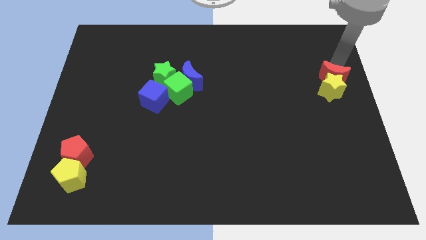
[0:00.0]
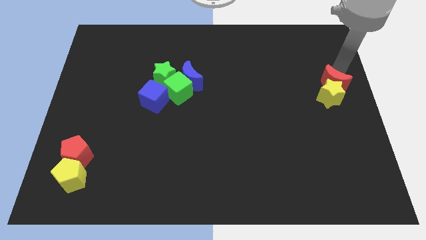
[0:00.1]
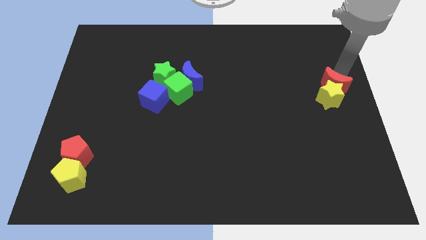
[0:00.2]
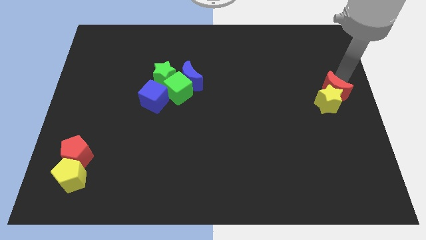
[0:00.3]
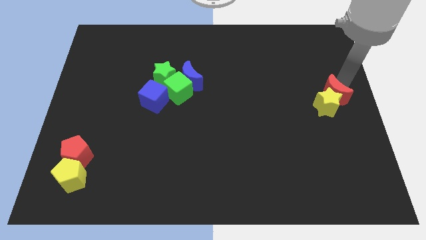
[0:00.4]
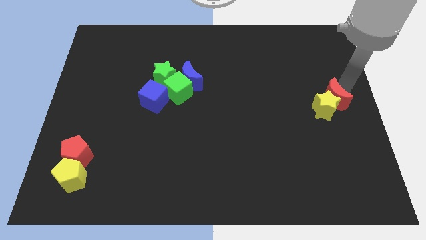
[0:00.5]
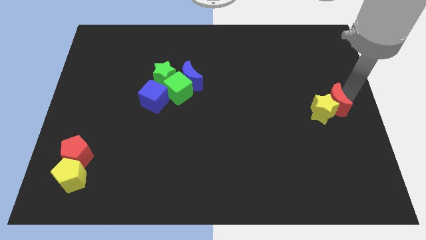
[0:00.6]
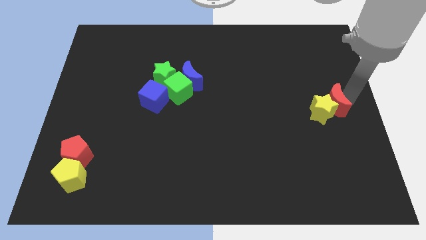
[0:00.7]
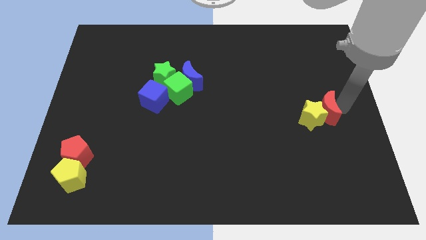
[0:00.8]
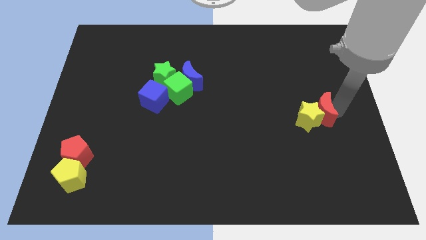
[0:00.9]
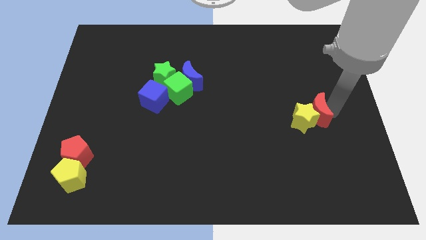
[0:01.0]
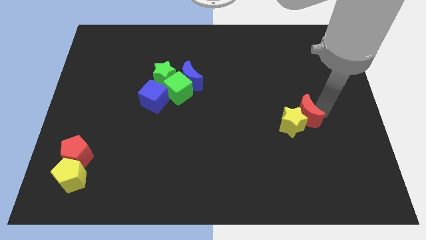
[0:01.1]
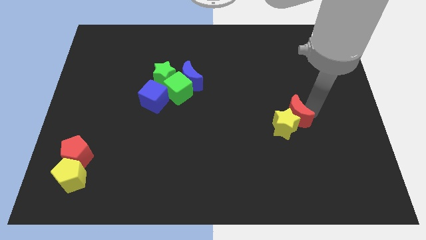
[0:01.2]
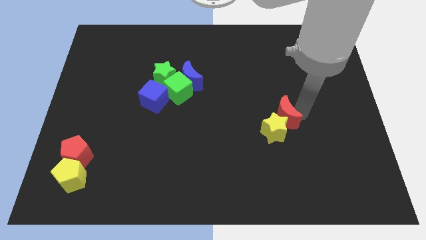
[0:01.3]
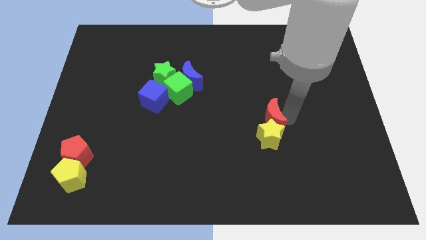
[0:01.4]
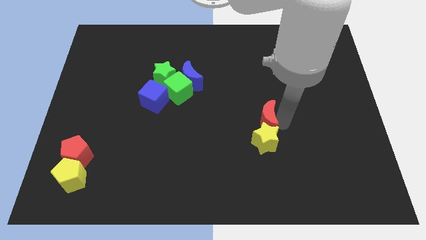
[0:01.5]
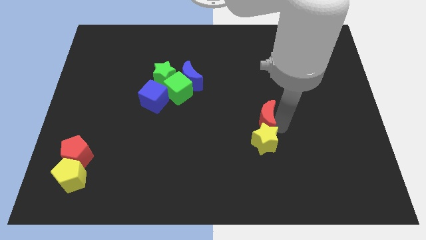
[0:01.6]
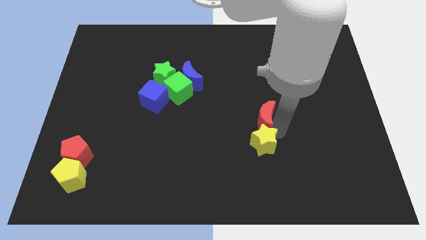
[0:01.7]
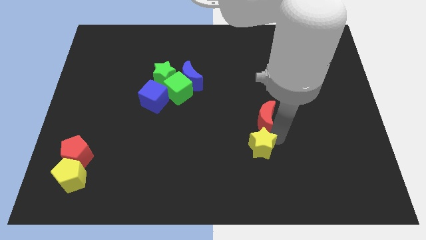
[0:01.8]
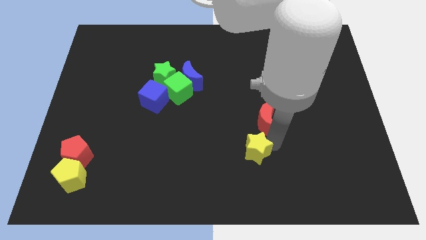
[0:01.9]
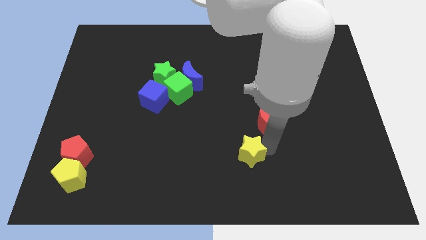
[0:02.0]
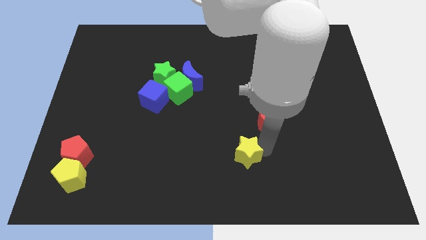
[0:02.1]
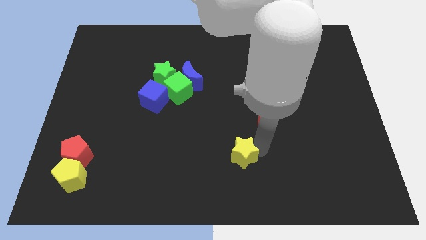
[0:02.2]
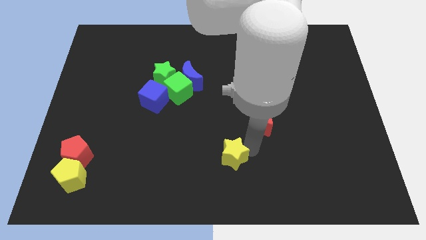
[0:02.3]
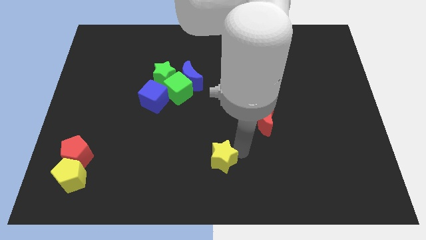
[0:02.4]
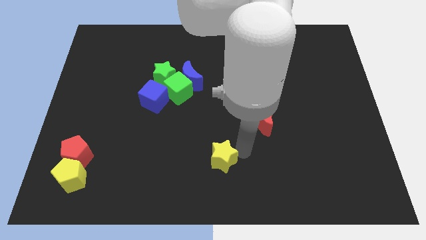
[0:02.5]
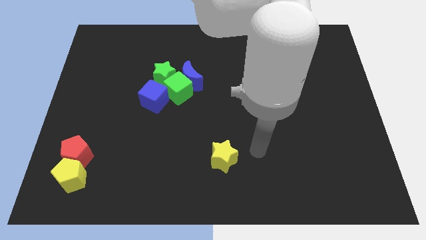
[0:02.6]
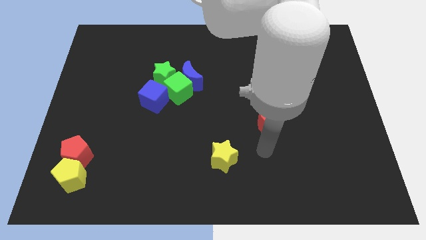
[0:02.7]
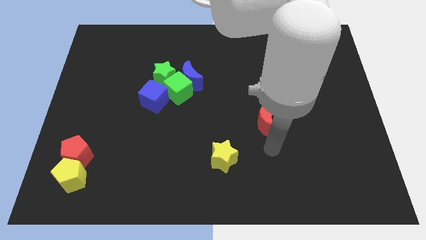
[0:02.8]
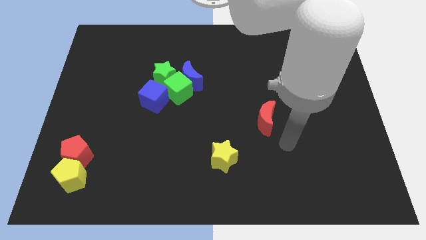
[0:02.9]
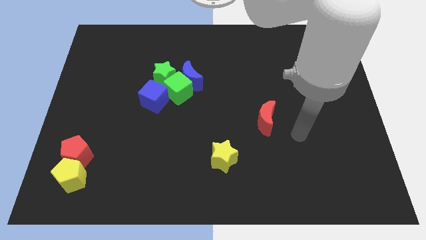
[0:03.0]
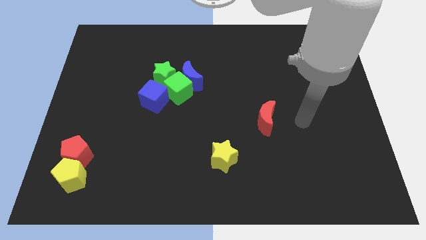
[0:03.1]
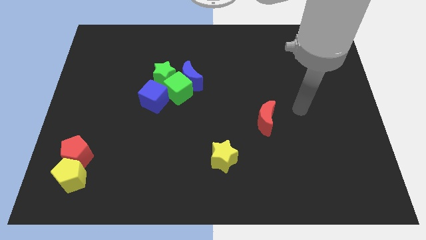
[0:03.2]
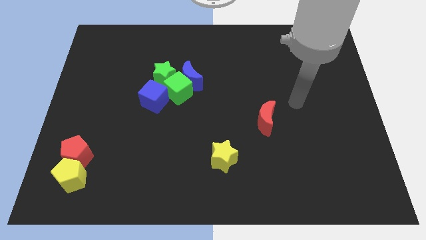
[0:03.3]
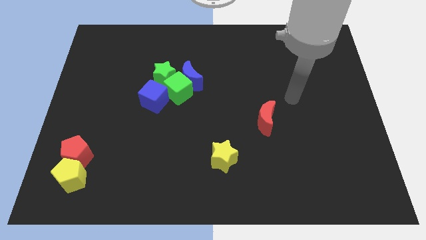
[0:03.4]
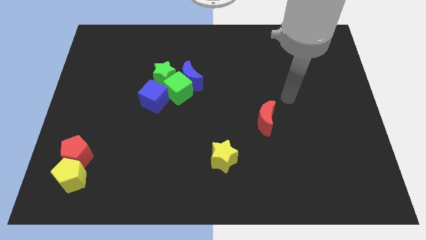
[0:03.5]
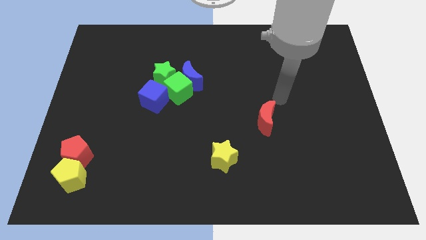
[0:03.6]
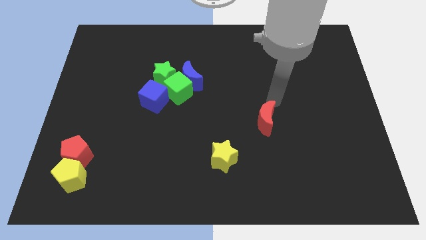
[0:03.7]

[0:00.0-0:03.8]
push the yellow star with the help of red crescent towards bottom center of the board

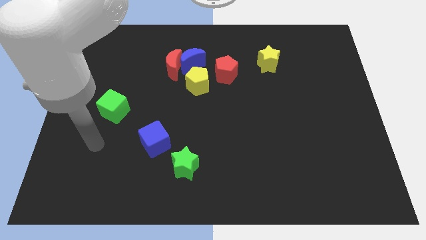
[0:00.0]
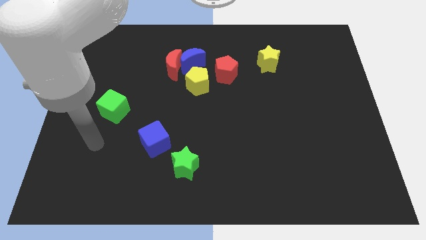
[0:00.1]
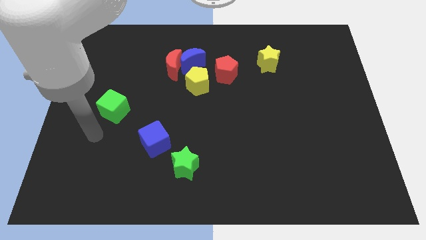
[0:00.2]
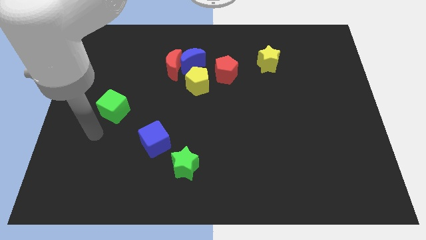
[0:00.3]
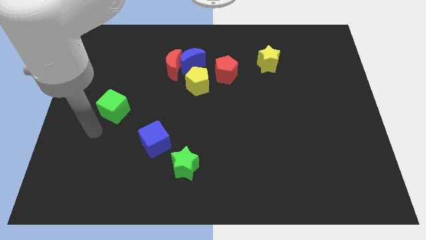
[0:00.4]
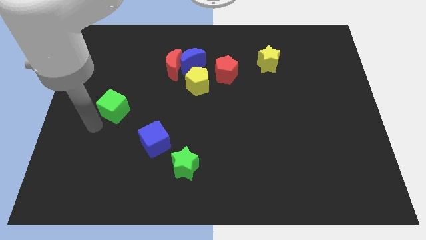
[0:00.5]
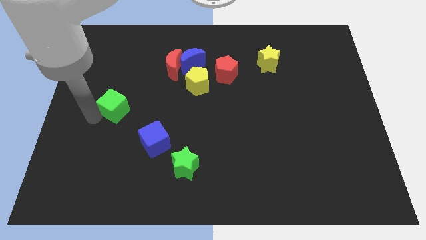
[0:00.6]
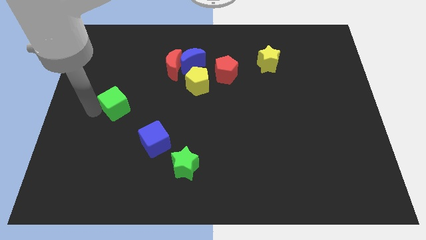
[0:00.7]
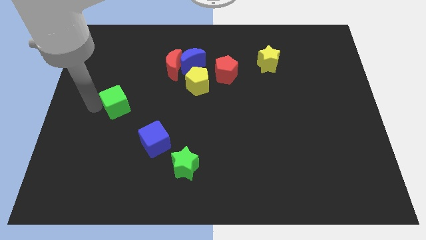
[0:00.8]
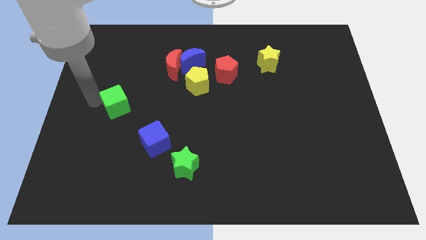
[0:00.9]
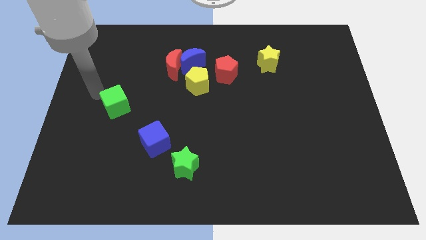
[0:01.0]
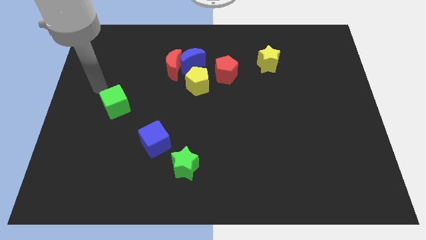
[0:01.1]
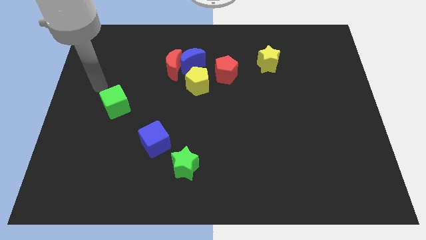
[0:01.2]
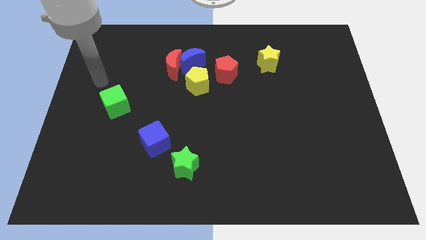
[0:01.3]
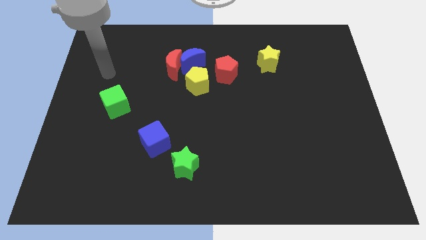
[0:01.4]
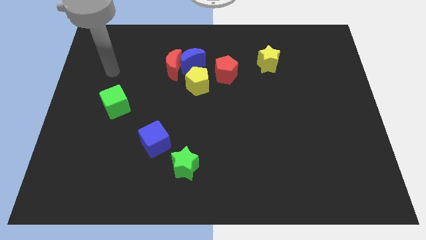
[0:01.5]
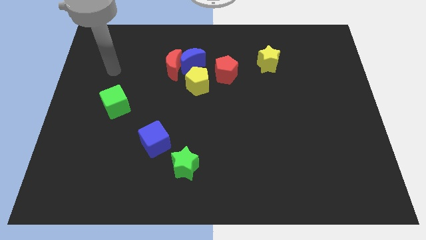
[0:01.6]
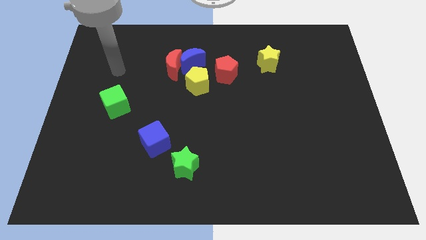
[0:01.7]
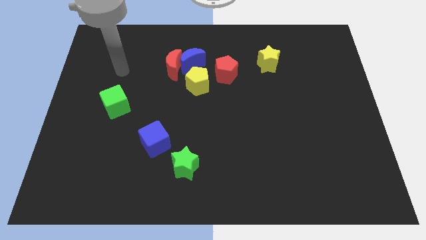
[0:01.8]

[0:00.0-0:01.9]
place arm on the top of green cube

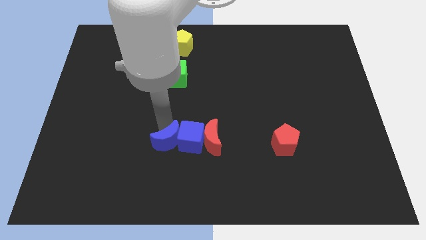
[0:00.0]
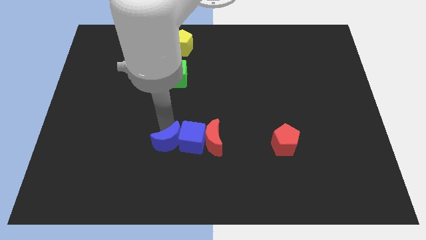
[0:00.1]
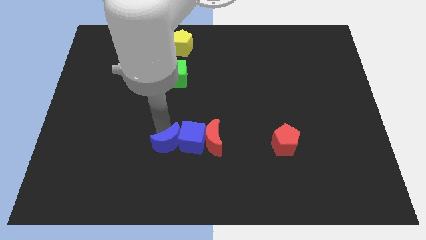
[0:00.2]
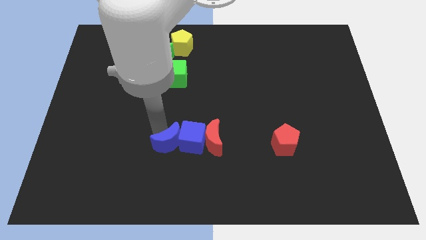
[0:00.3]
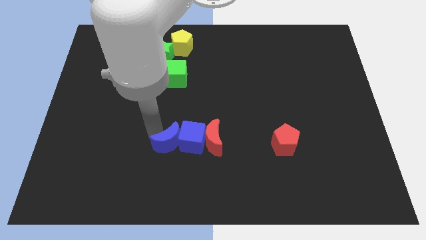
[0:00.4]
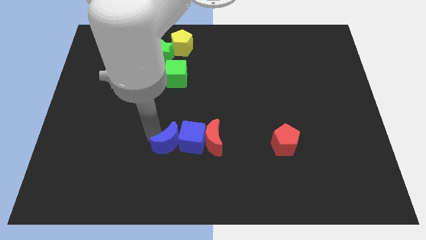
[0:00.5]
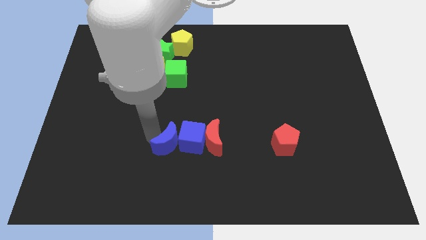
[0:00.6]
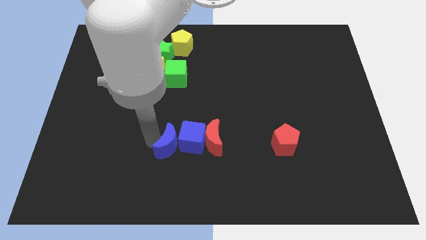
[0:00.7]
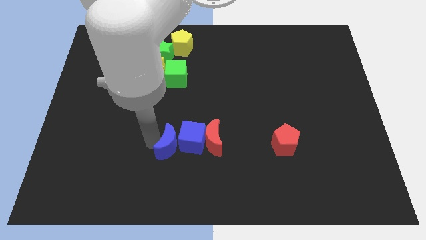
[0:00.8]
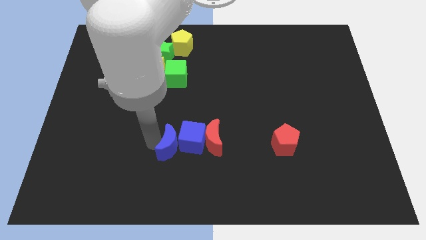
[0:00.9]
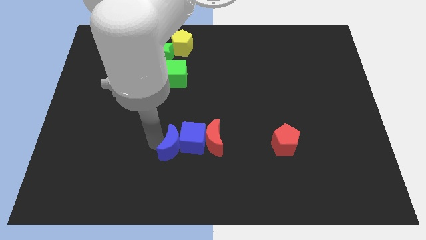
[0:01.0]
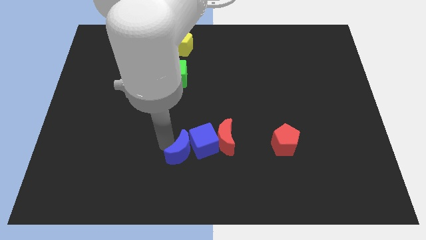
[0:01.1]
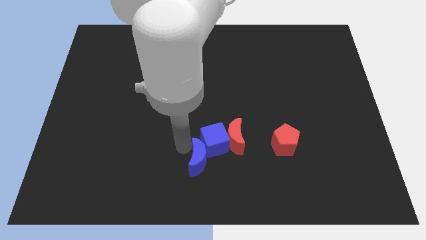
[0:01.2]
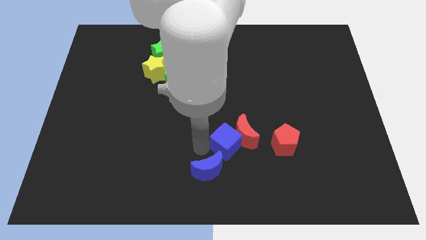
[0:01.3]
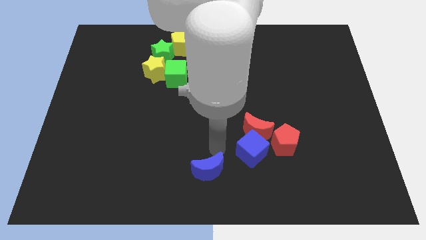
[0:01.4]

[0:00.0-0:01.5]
place the red crescent to left side of the red pentagon

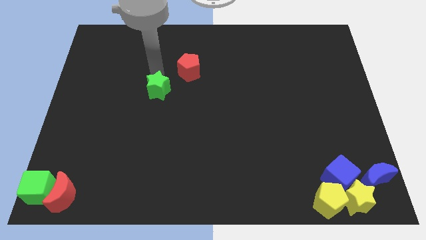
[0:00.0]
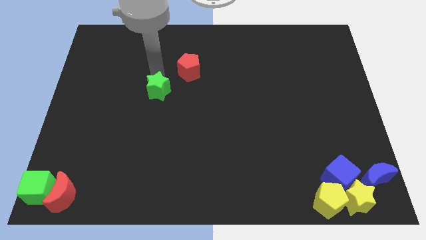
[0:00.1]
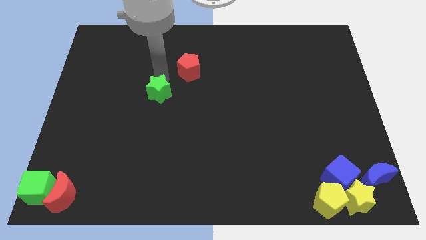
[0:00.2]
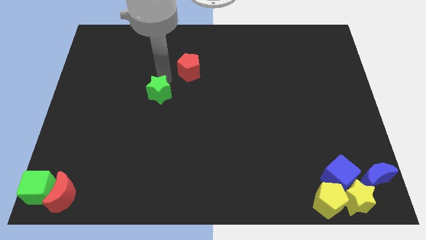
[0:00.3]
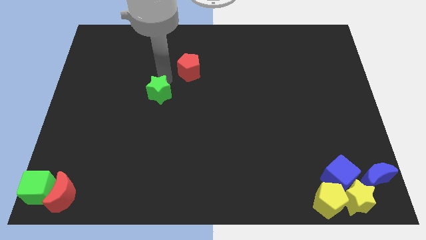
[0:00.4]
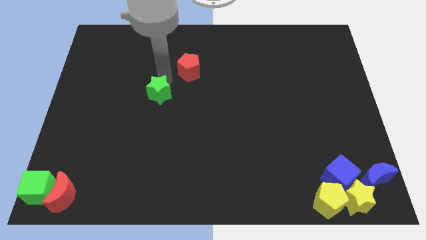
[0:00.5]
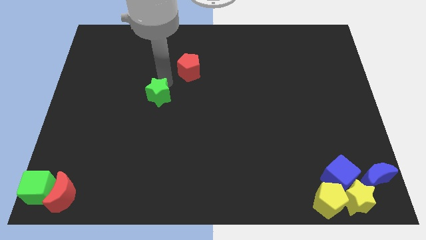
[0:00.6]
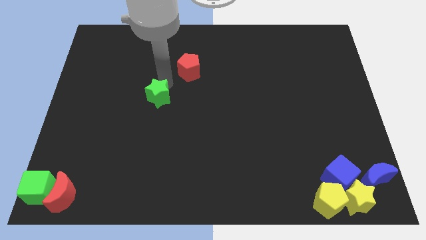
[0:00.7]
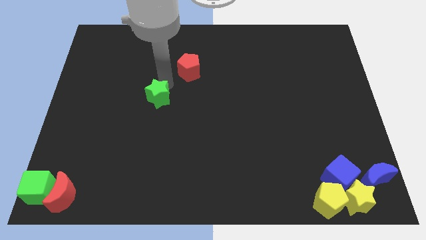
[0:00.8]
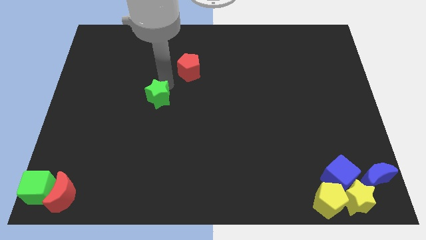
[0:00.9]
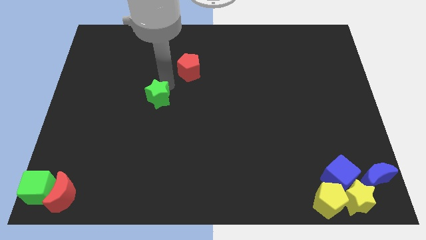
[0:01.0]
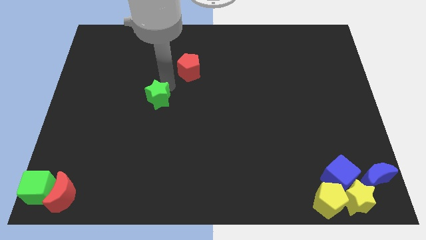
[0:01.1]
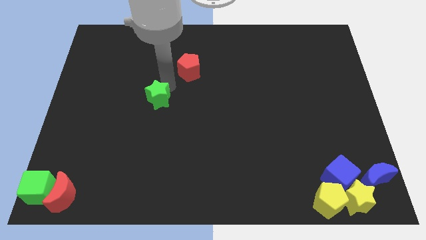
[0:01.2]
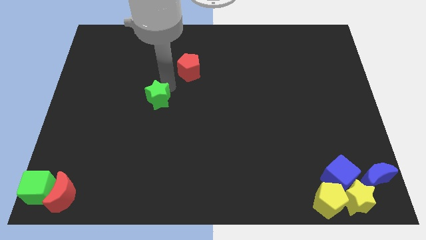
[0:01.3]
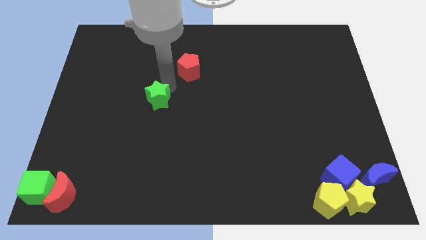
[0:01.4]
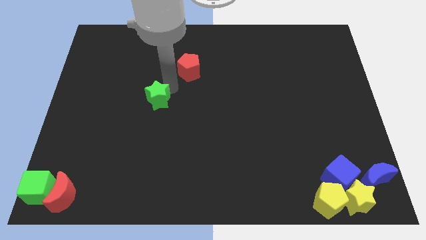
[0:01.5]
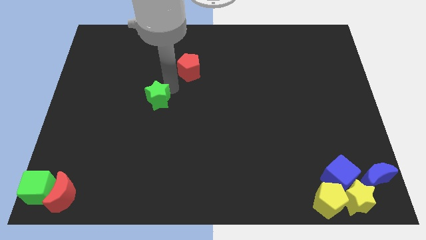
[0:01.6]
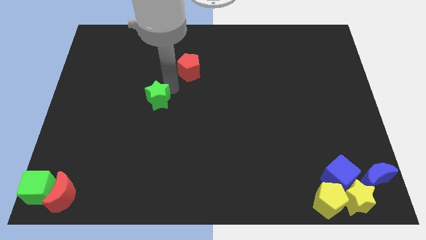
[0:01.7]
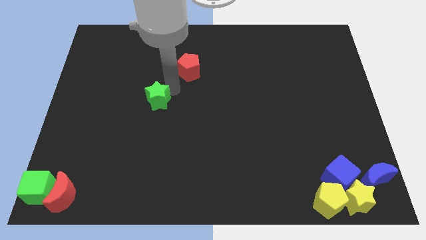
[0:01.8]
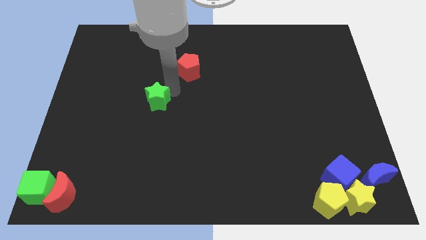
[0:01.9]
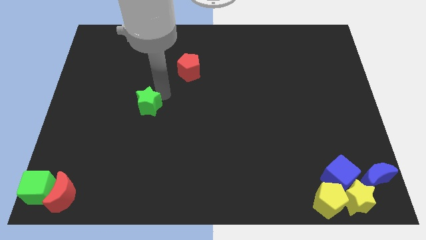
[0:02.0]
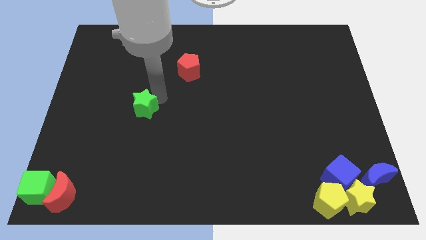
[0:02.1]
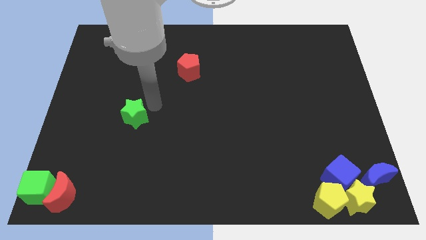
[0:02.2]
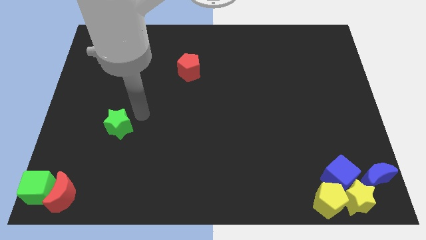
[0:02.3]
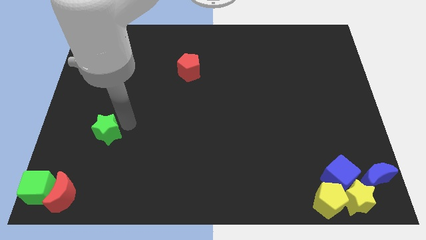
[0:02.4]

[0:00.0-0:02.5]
push the green star towards the bottom left corner
